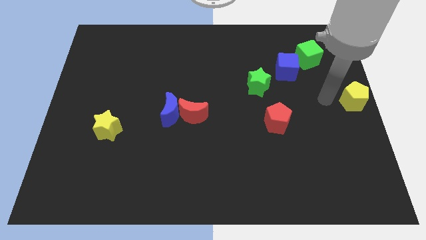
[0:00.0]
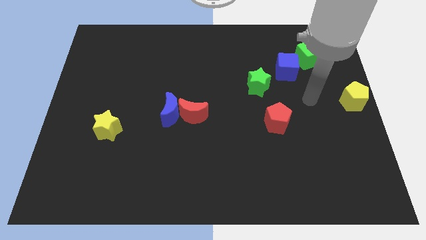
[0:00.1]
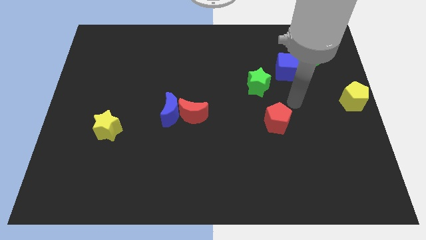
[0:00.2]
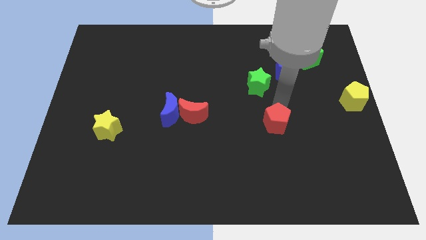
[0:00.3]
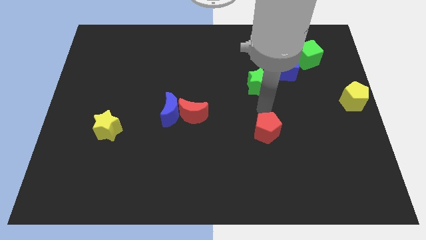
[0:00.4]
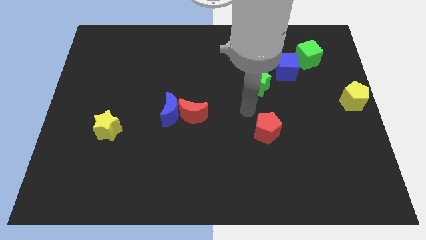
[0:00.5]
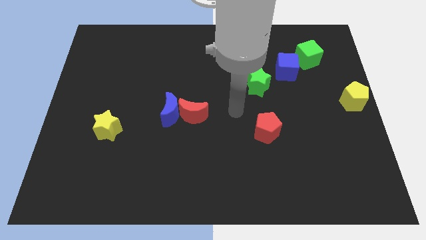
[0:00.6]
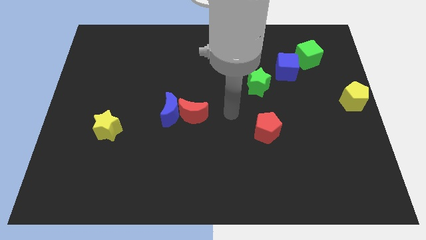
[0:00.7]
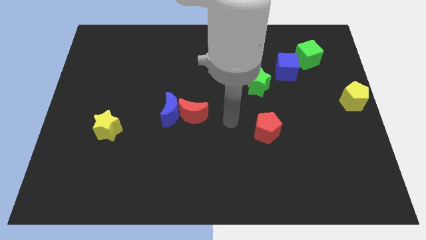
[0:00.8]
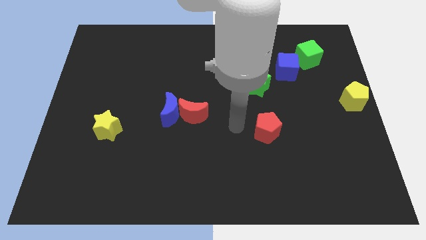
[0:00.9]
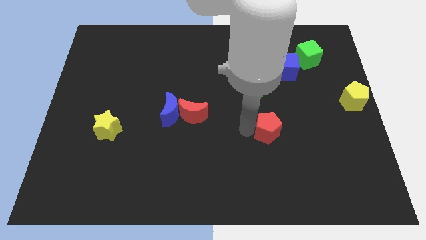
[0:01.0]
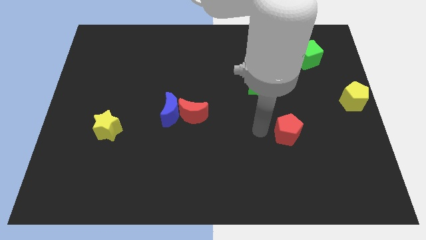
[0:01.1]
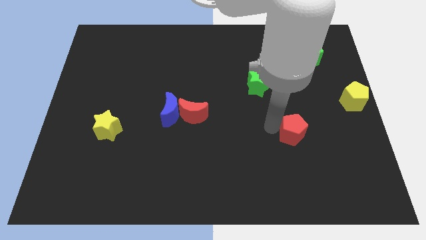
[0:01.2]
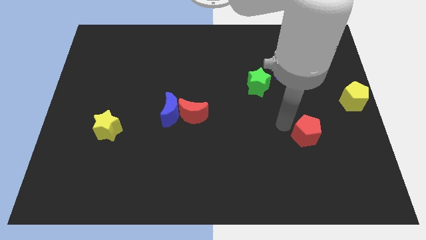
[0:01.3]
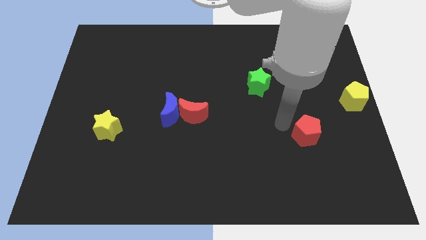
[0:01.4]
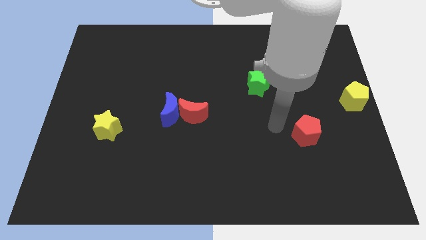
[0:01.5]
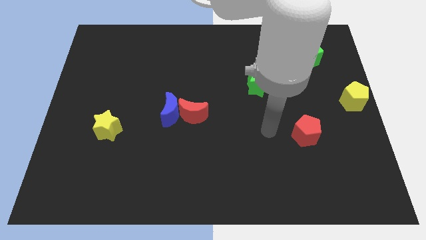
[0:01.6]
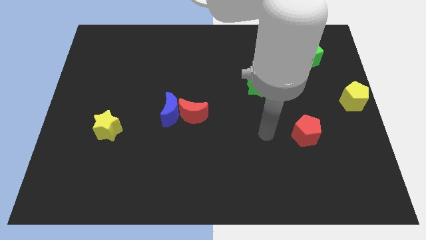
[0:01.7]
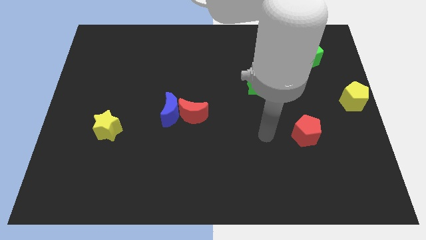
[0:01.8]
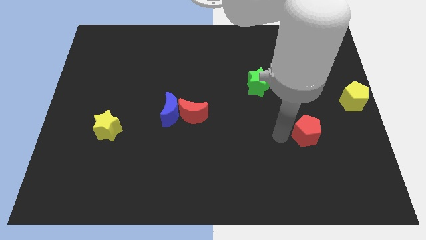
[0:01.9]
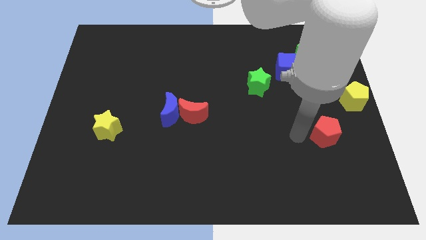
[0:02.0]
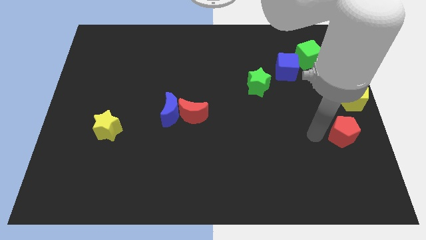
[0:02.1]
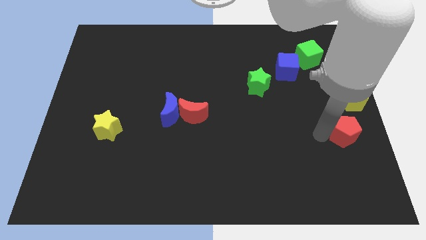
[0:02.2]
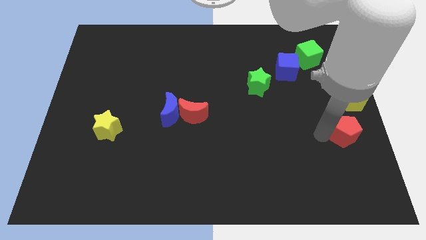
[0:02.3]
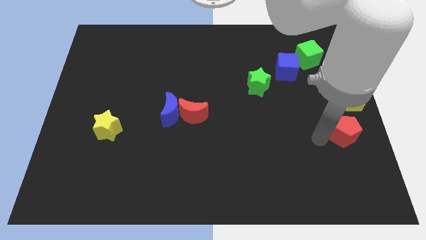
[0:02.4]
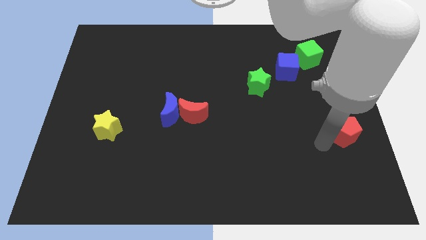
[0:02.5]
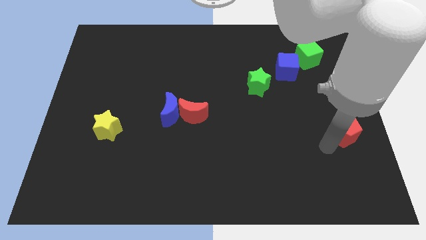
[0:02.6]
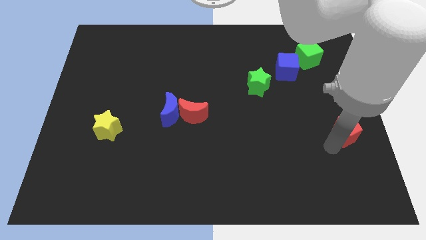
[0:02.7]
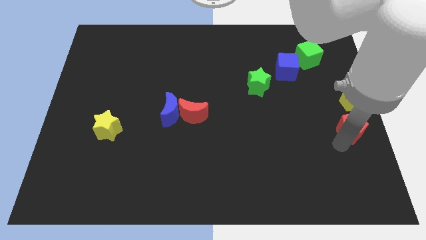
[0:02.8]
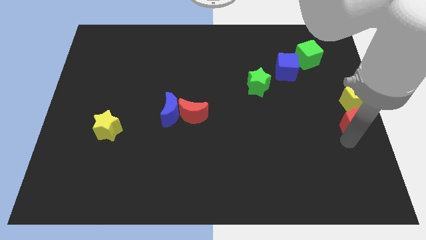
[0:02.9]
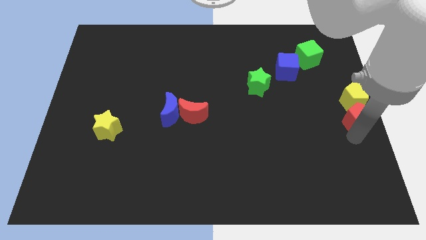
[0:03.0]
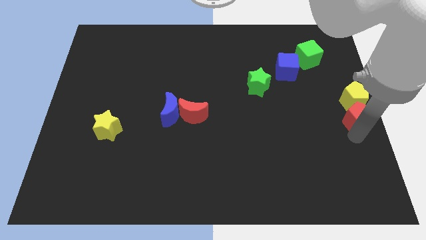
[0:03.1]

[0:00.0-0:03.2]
place the red pentagon below the yellow pentagon

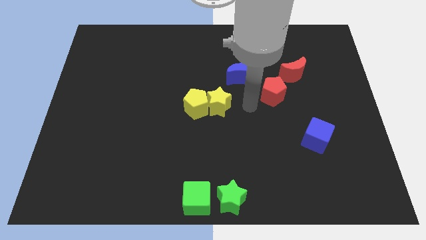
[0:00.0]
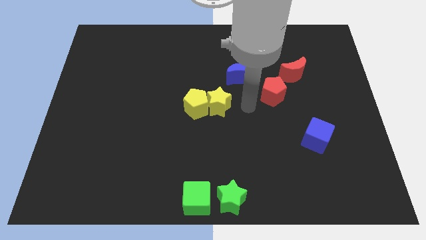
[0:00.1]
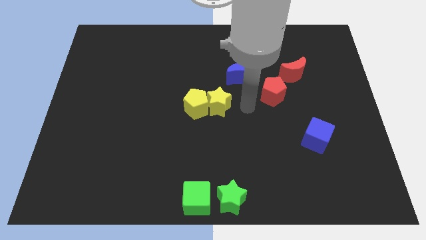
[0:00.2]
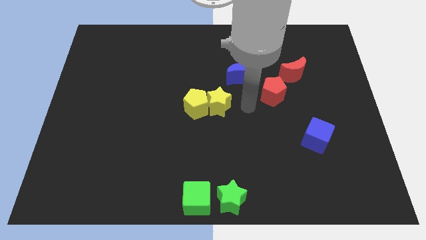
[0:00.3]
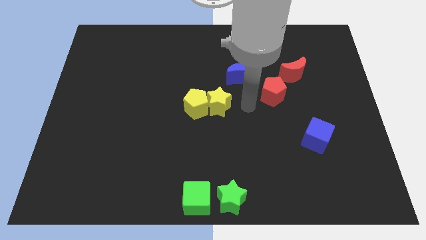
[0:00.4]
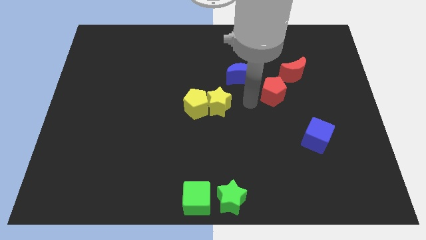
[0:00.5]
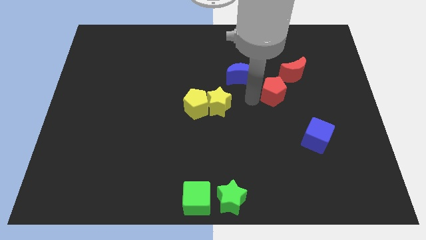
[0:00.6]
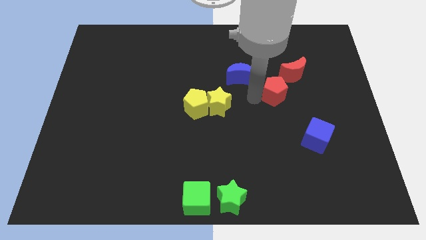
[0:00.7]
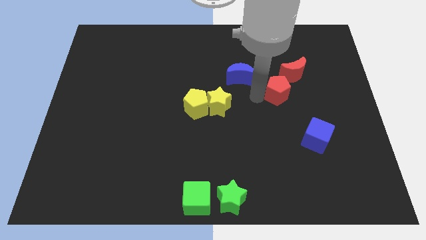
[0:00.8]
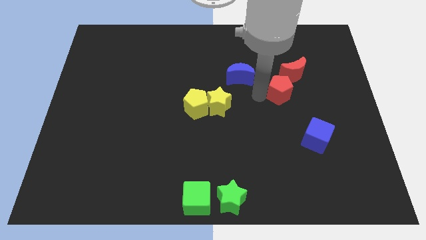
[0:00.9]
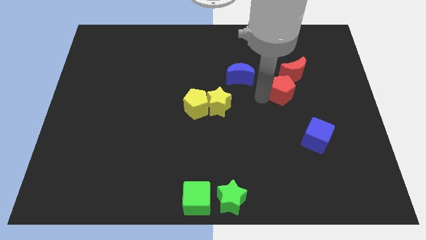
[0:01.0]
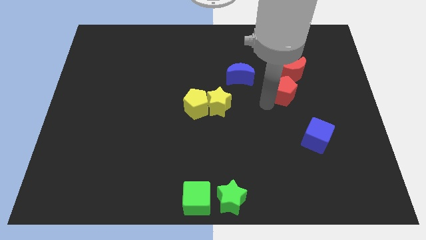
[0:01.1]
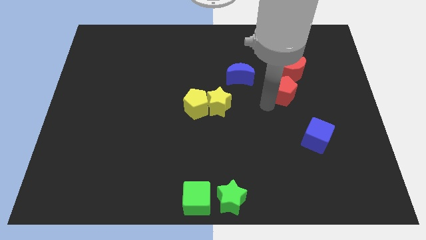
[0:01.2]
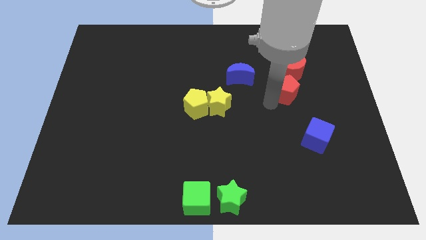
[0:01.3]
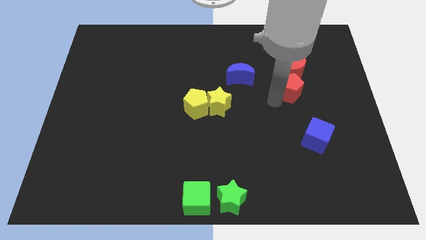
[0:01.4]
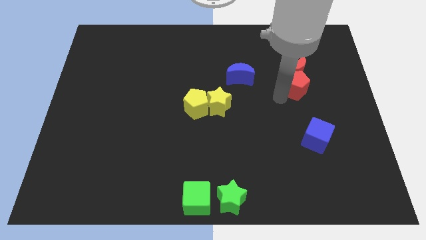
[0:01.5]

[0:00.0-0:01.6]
move the red pentagon towards upward

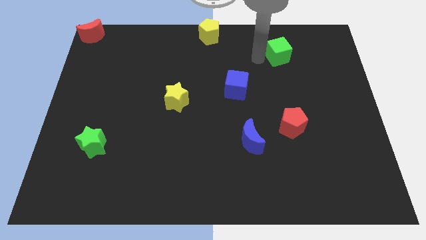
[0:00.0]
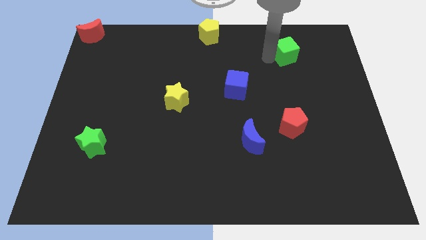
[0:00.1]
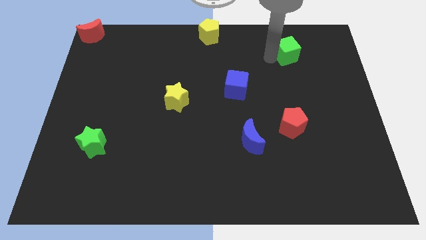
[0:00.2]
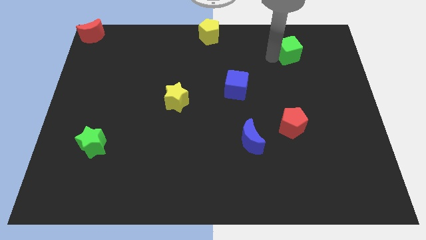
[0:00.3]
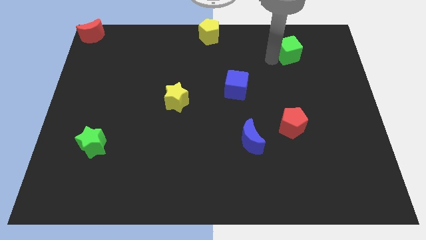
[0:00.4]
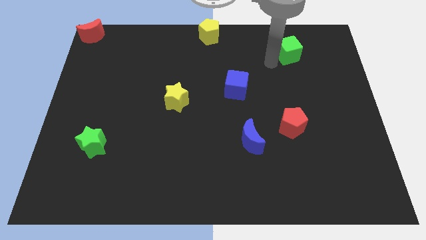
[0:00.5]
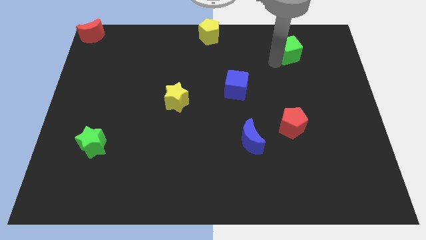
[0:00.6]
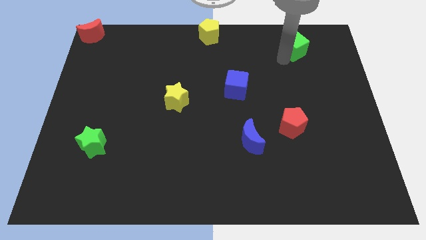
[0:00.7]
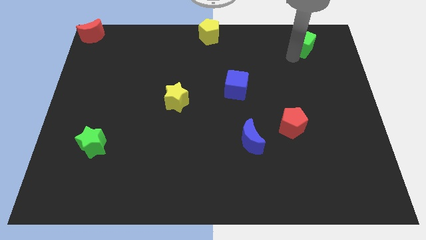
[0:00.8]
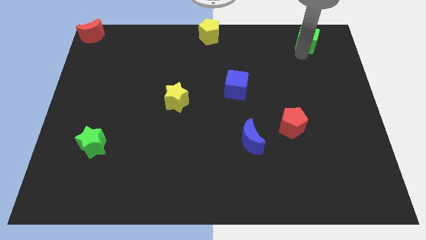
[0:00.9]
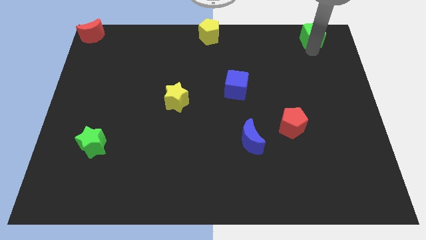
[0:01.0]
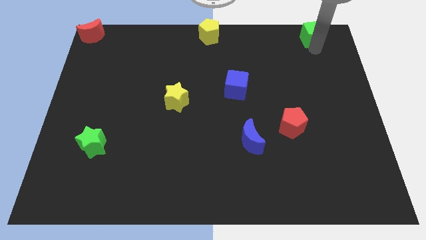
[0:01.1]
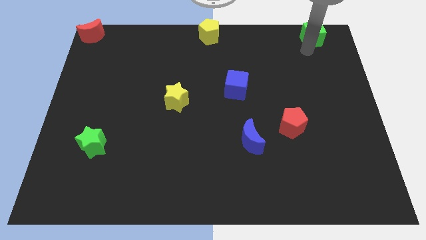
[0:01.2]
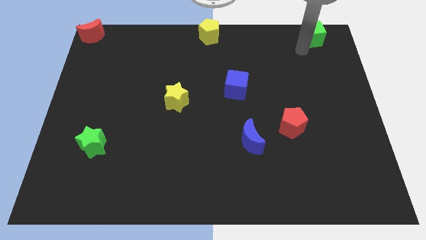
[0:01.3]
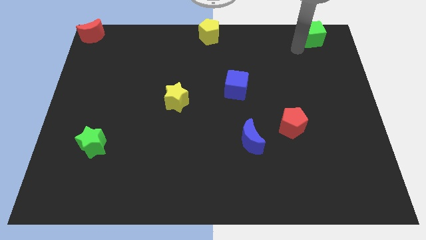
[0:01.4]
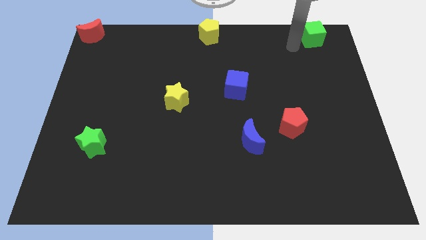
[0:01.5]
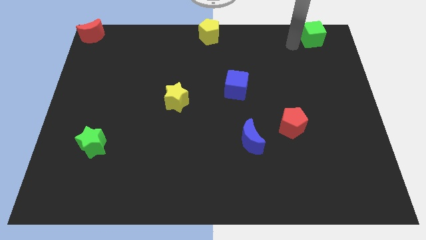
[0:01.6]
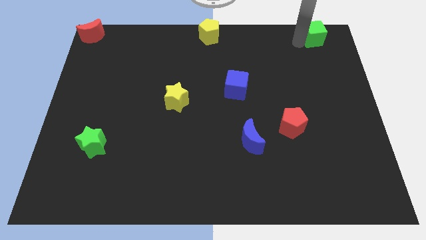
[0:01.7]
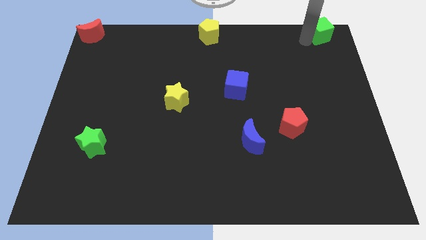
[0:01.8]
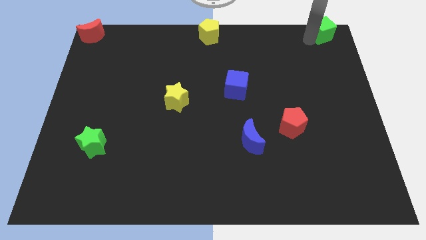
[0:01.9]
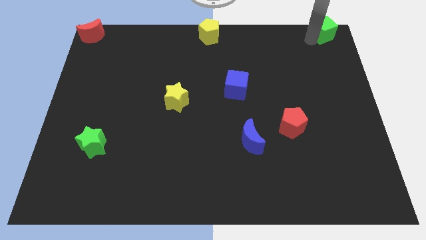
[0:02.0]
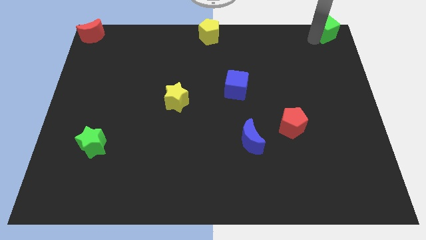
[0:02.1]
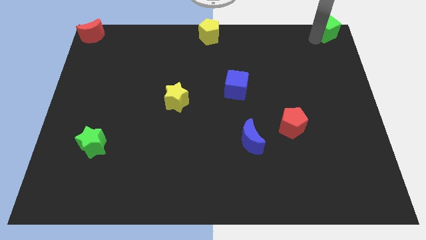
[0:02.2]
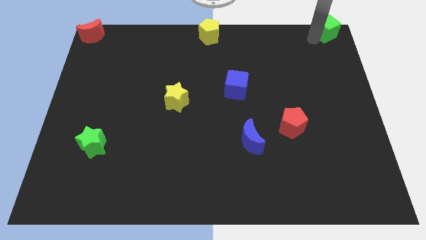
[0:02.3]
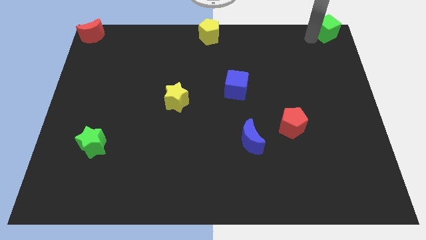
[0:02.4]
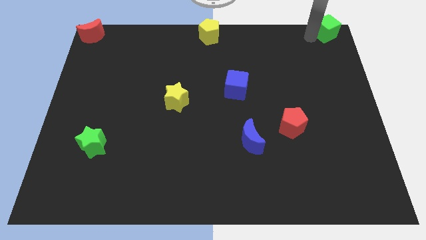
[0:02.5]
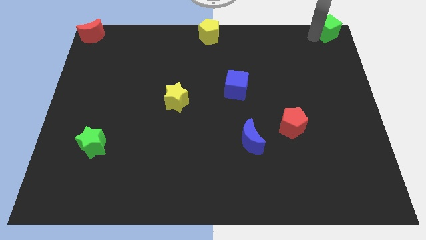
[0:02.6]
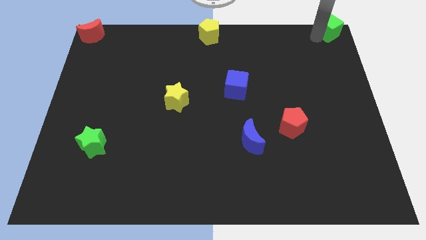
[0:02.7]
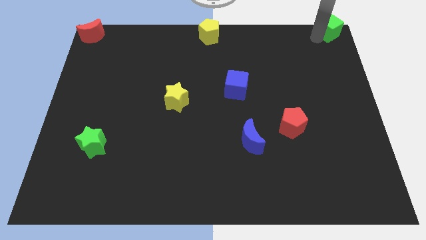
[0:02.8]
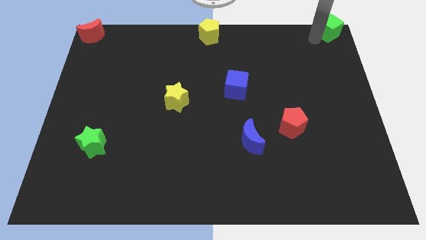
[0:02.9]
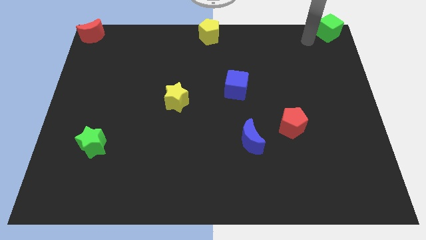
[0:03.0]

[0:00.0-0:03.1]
push the green cube towards the top right of the board

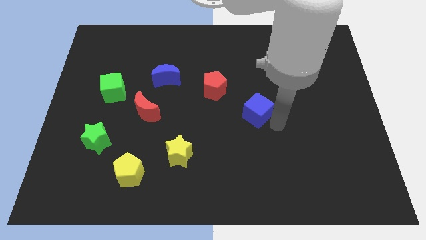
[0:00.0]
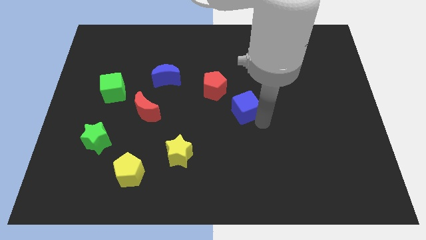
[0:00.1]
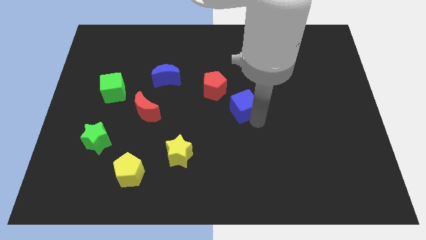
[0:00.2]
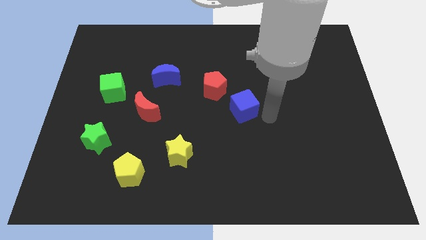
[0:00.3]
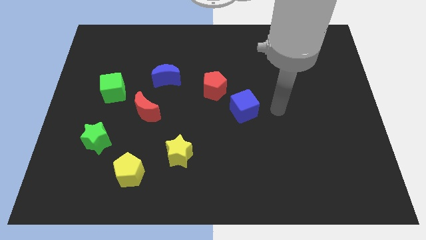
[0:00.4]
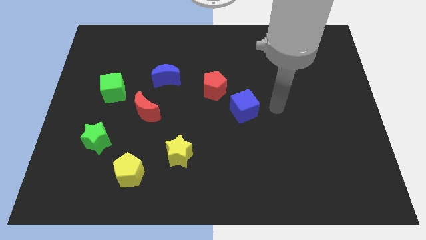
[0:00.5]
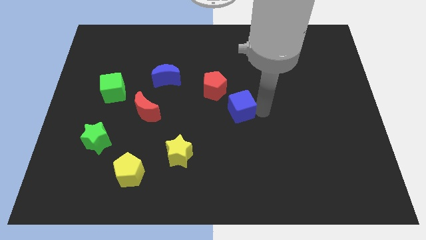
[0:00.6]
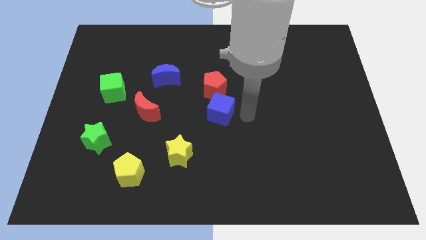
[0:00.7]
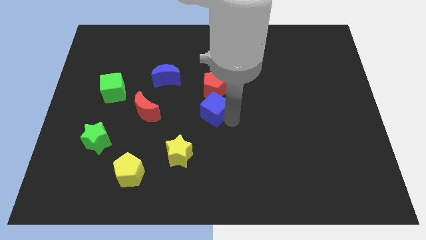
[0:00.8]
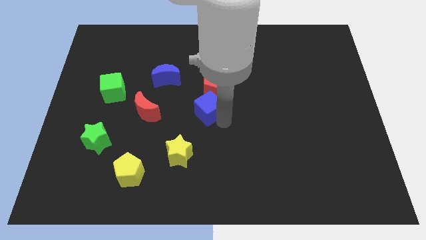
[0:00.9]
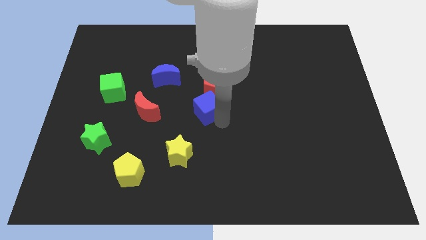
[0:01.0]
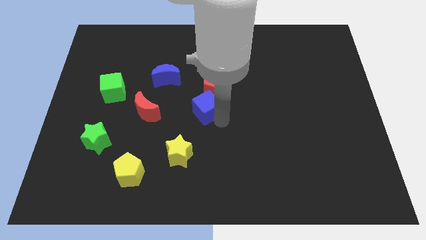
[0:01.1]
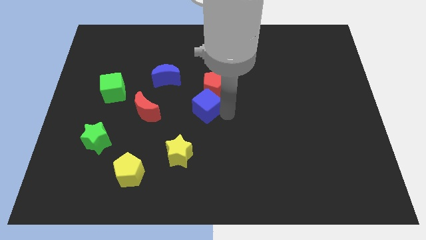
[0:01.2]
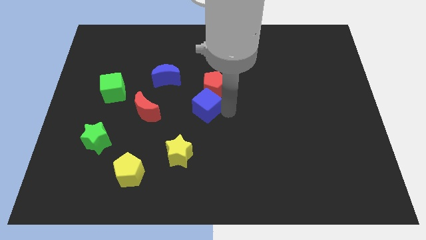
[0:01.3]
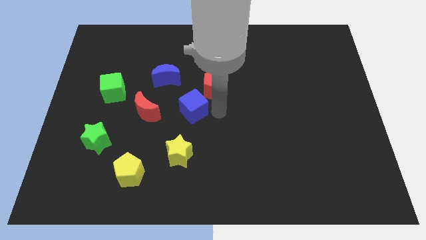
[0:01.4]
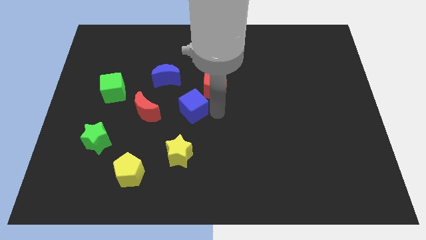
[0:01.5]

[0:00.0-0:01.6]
place the blue cube in between the red pentagon and yellow star
